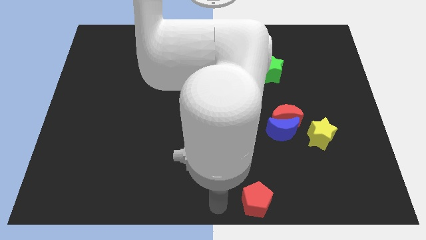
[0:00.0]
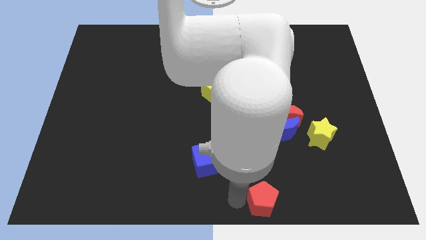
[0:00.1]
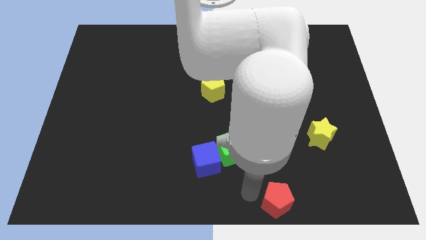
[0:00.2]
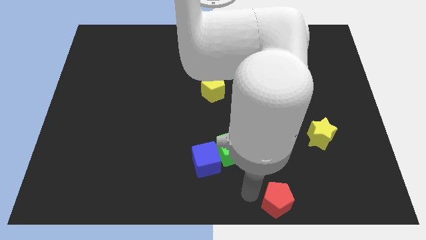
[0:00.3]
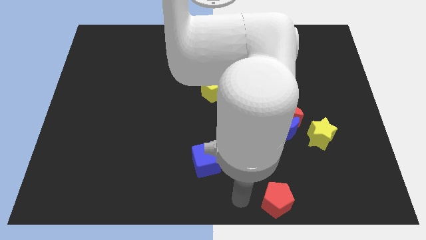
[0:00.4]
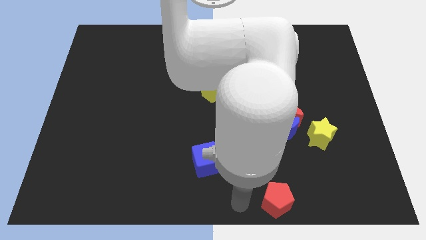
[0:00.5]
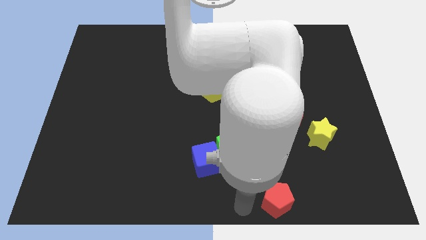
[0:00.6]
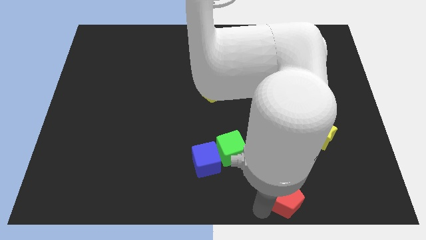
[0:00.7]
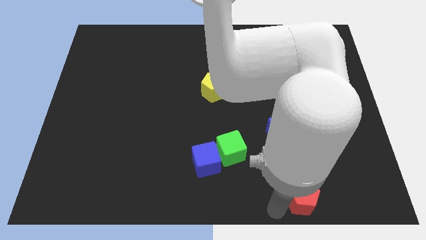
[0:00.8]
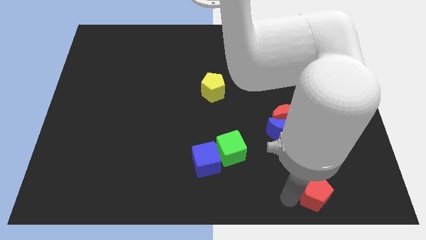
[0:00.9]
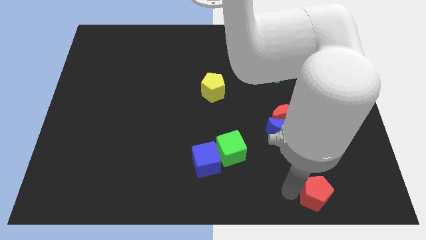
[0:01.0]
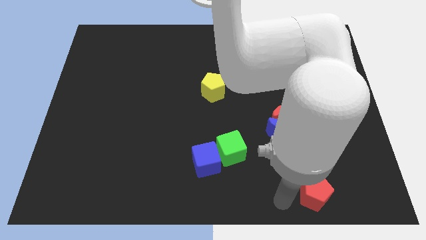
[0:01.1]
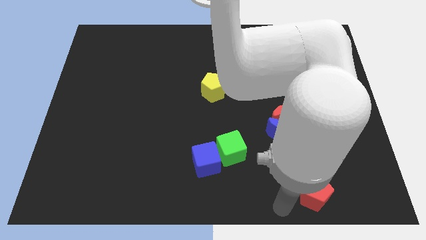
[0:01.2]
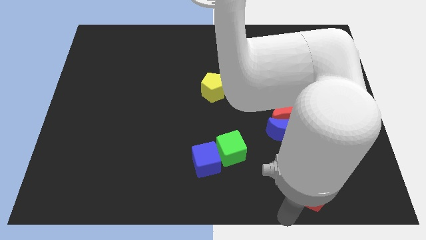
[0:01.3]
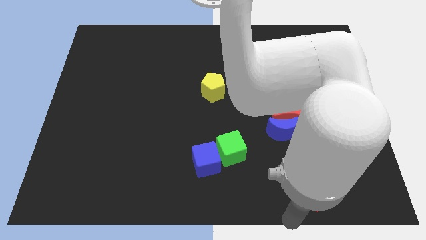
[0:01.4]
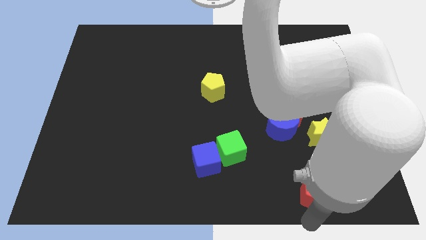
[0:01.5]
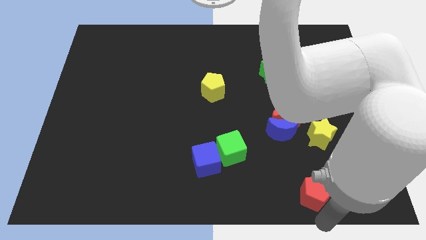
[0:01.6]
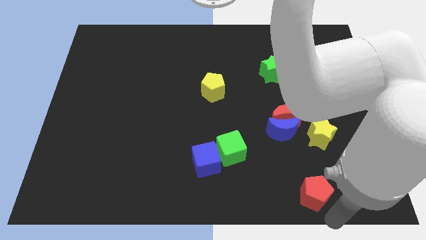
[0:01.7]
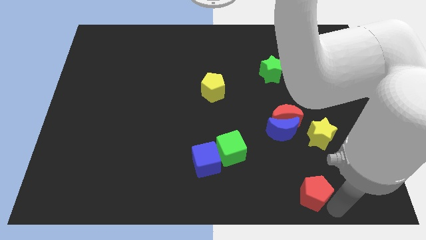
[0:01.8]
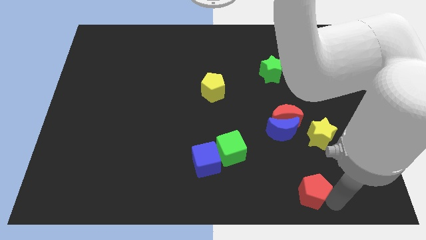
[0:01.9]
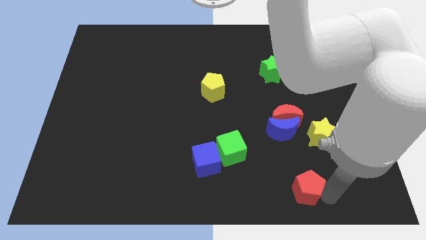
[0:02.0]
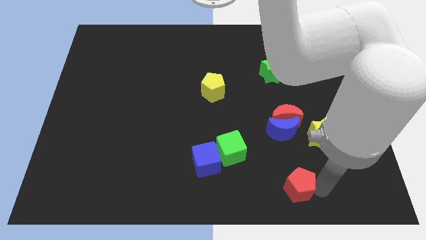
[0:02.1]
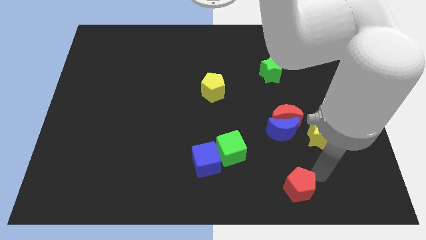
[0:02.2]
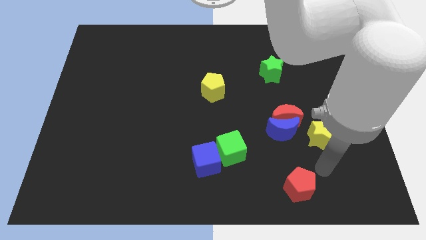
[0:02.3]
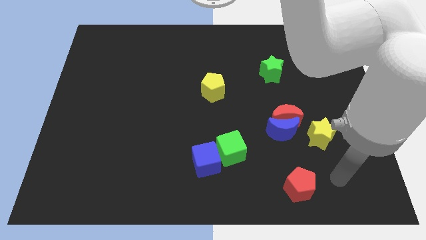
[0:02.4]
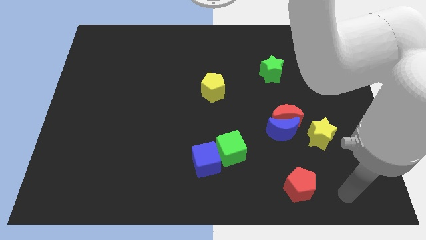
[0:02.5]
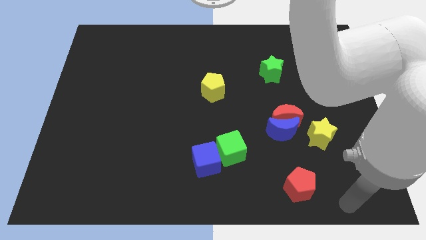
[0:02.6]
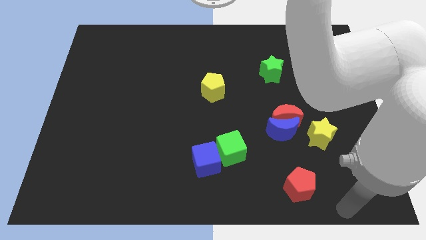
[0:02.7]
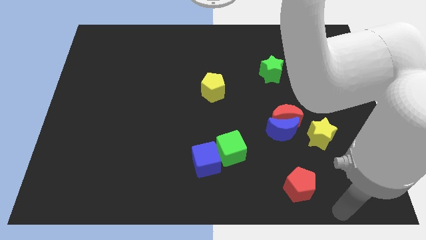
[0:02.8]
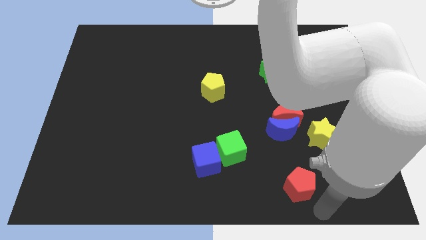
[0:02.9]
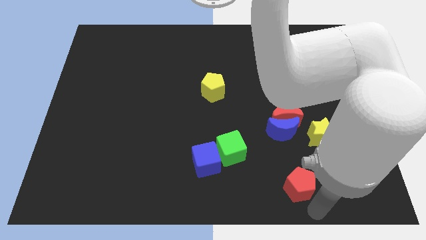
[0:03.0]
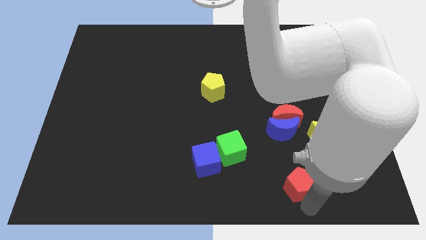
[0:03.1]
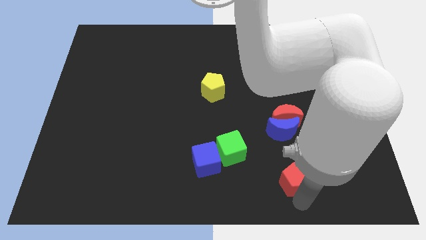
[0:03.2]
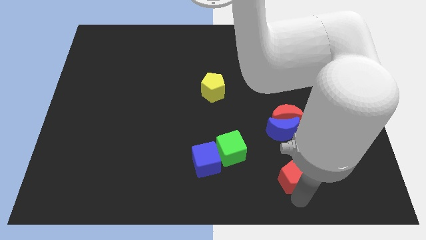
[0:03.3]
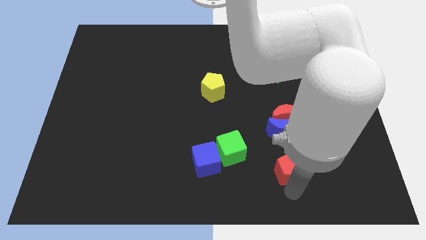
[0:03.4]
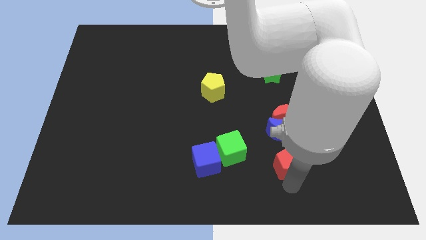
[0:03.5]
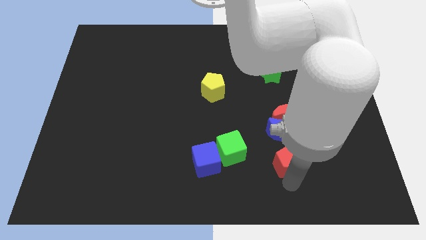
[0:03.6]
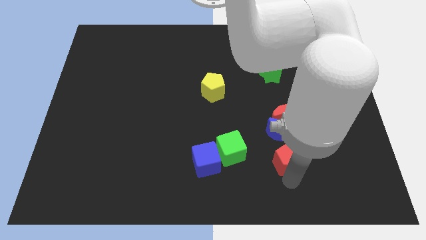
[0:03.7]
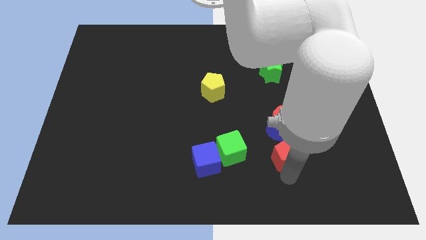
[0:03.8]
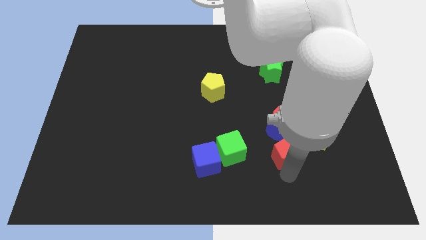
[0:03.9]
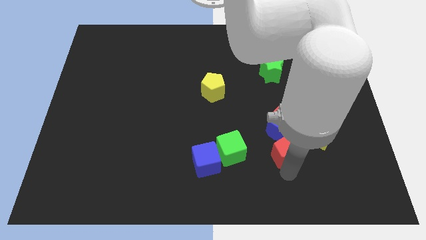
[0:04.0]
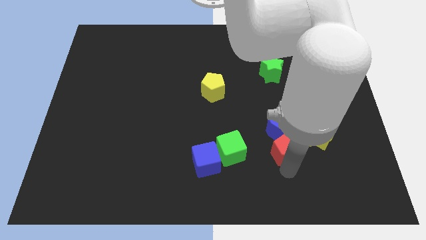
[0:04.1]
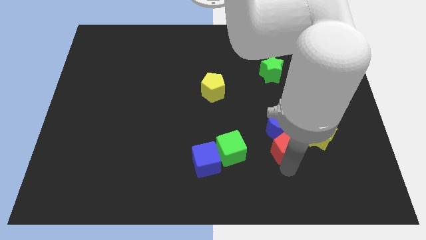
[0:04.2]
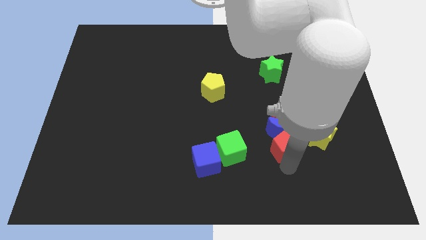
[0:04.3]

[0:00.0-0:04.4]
drag the red pentagon and place it below the blue moon

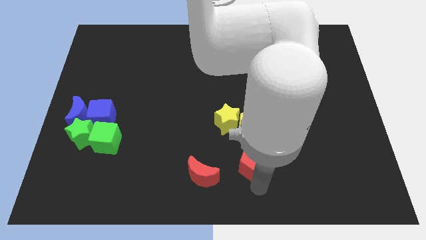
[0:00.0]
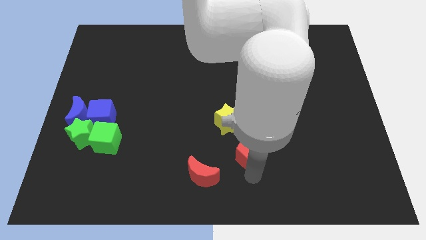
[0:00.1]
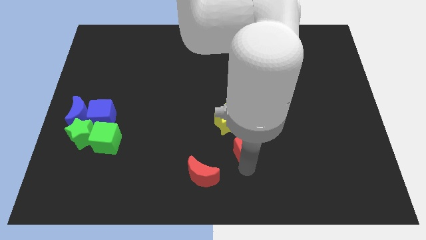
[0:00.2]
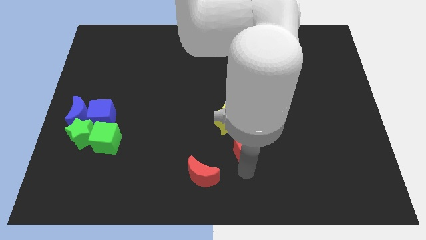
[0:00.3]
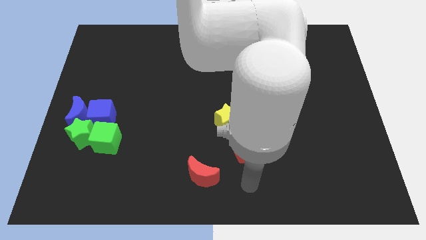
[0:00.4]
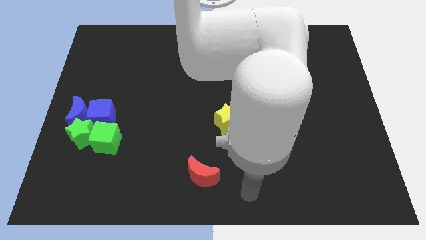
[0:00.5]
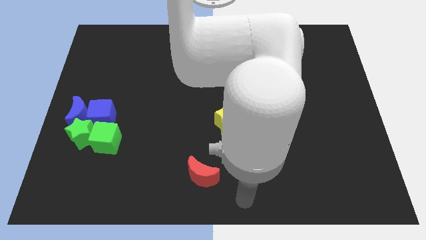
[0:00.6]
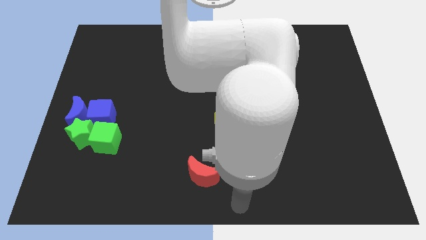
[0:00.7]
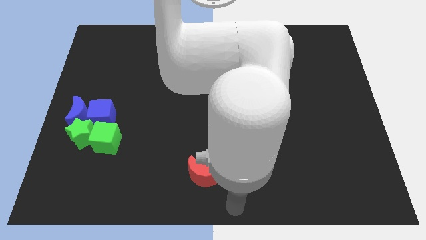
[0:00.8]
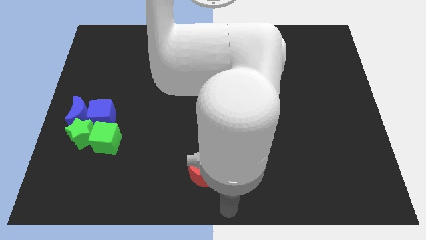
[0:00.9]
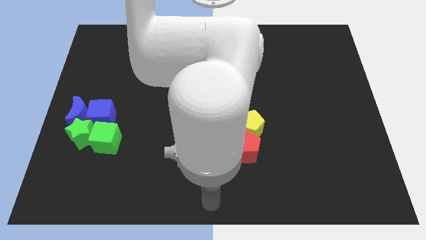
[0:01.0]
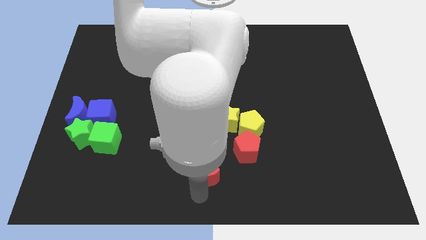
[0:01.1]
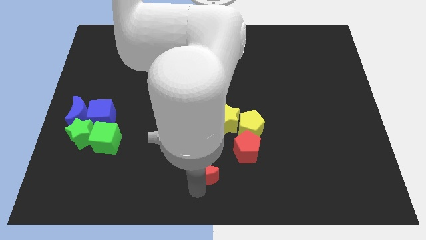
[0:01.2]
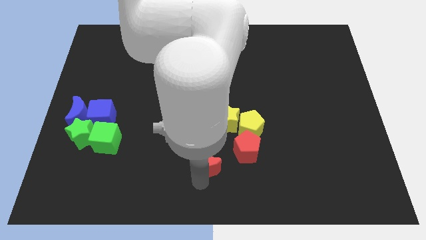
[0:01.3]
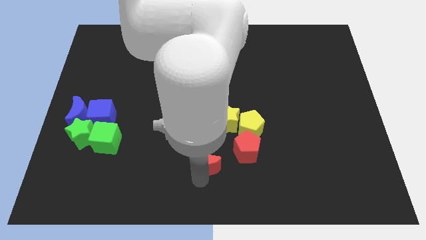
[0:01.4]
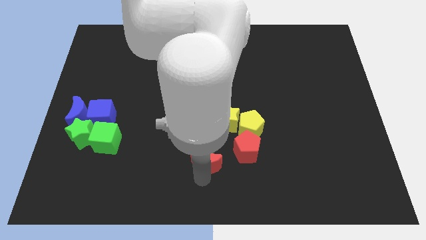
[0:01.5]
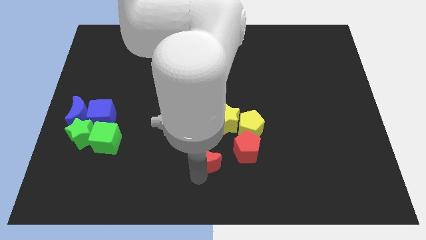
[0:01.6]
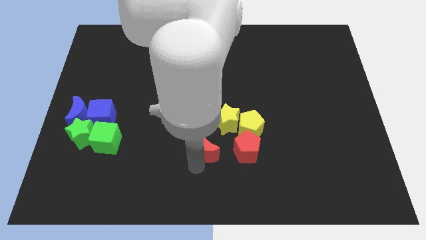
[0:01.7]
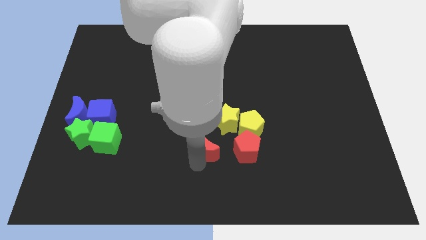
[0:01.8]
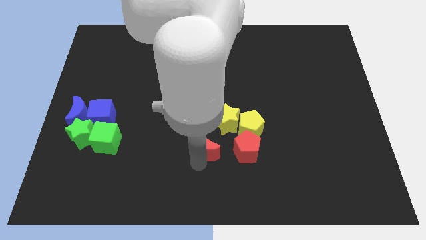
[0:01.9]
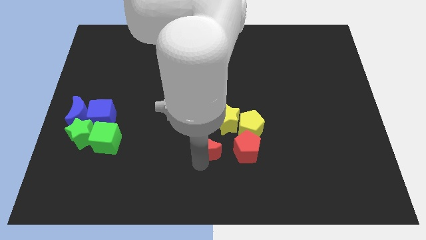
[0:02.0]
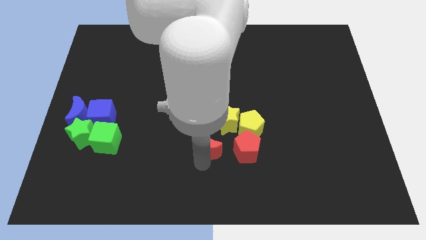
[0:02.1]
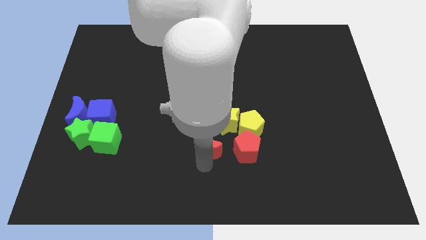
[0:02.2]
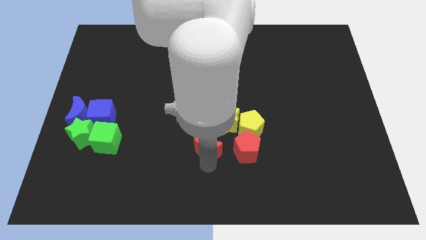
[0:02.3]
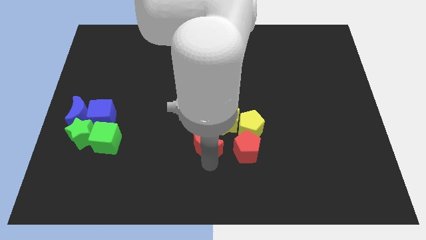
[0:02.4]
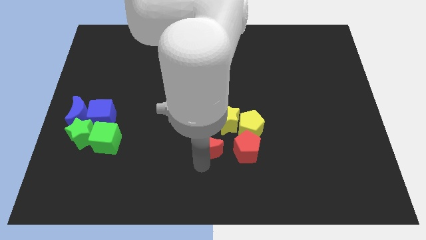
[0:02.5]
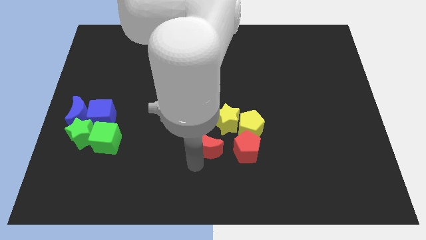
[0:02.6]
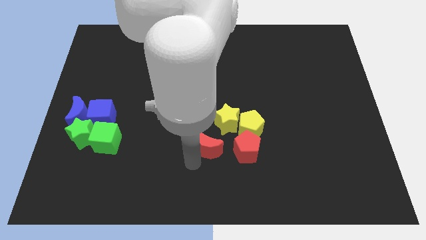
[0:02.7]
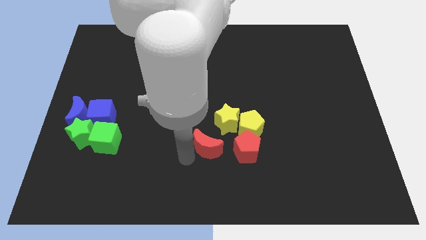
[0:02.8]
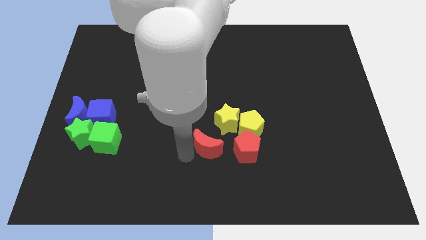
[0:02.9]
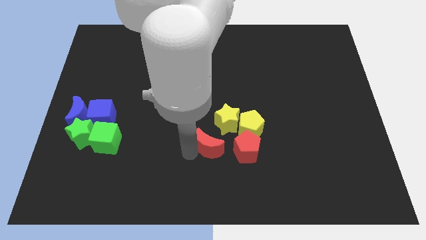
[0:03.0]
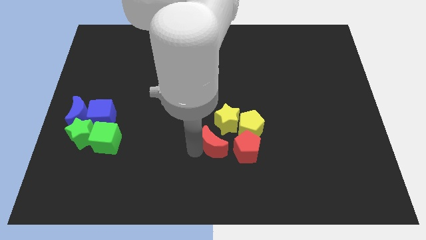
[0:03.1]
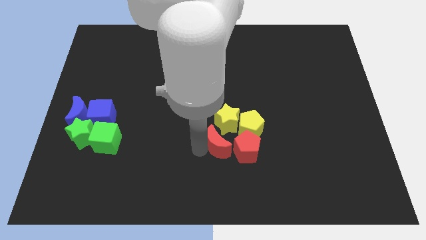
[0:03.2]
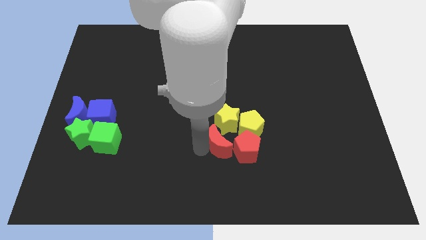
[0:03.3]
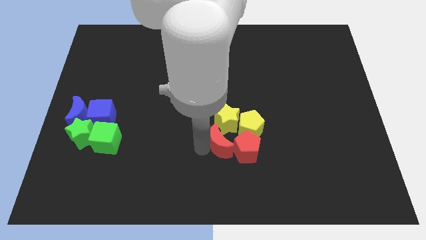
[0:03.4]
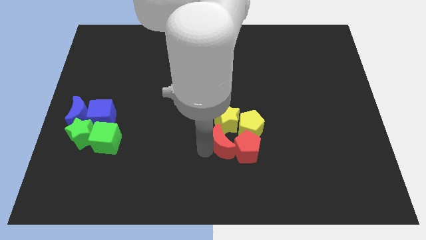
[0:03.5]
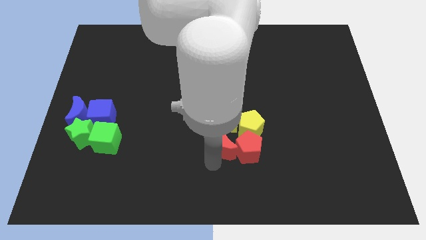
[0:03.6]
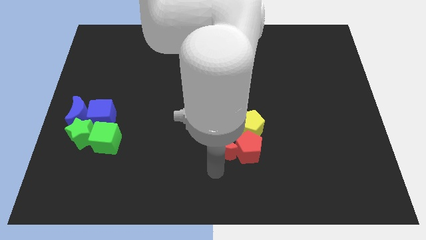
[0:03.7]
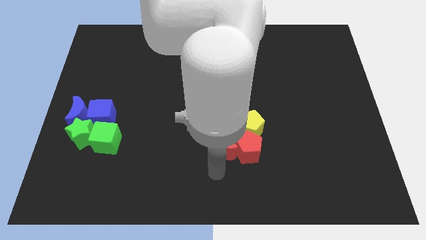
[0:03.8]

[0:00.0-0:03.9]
attach the red moon to the red pentagon

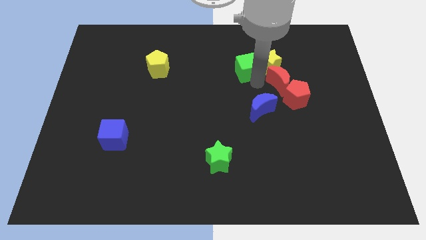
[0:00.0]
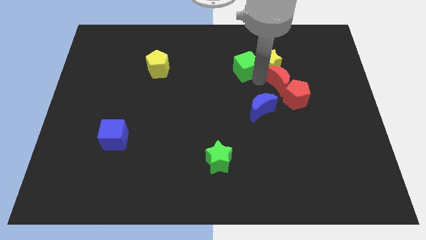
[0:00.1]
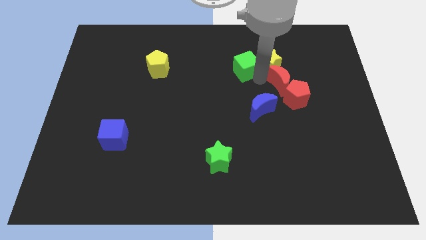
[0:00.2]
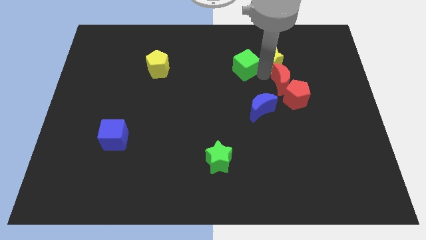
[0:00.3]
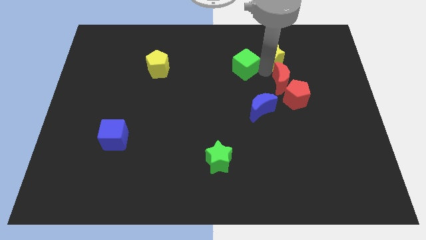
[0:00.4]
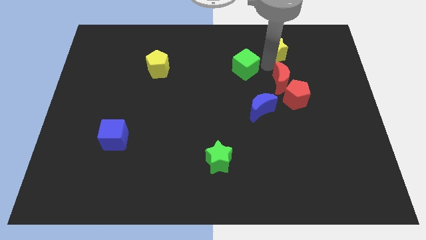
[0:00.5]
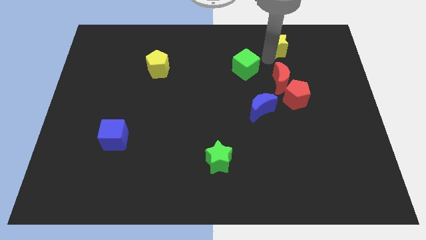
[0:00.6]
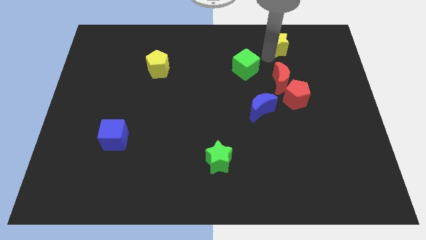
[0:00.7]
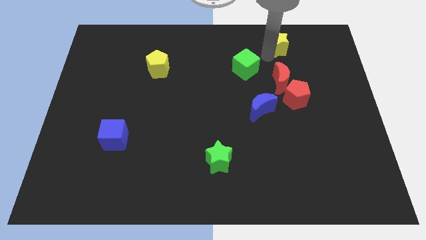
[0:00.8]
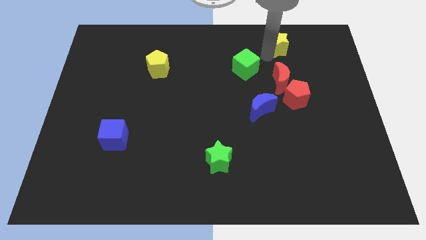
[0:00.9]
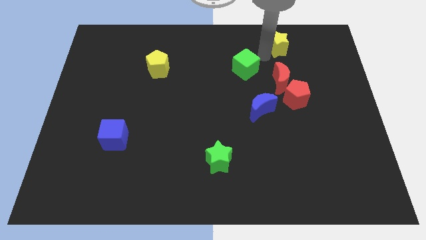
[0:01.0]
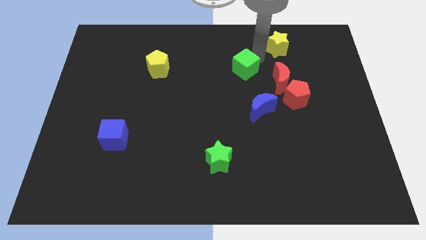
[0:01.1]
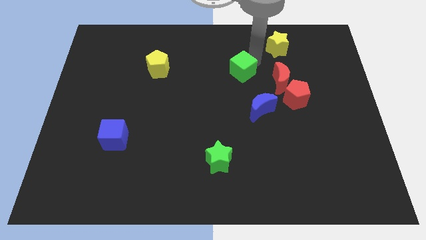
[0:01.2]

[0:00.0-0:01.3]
place the yellow star above the green cube
